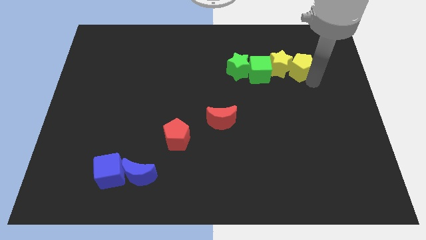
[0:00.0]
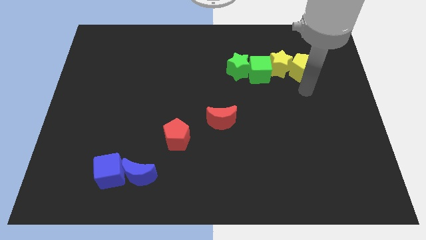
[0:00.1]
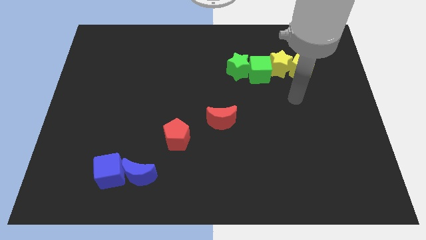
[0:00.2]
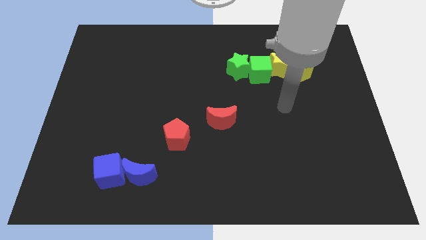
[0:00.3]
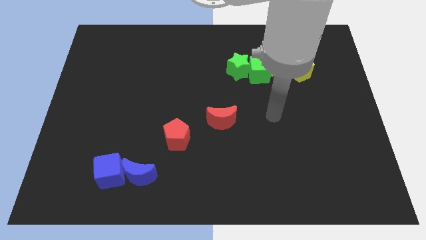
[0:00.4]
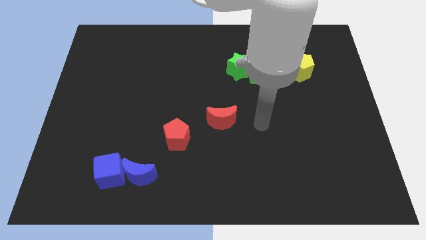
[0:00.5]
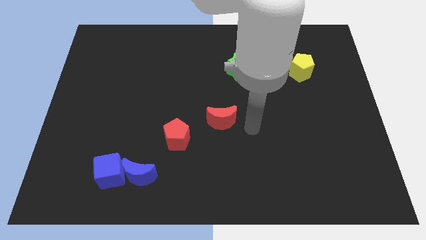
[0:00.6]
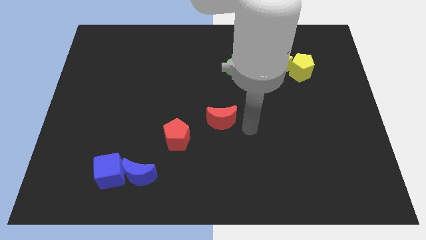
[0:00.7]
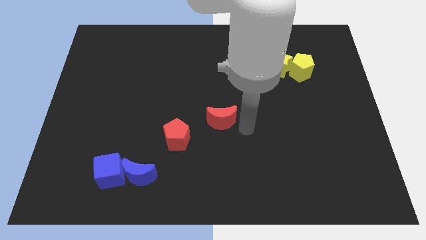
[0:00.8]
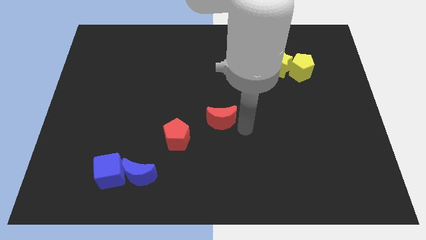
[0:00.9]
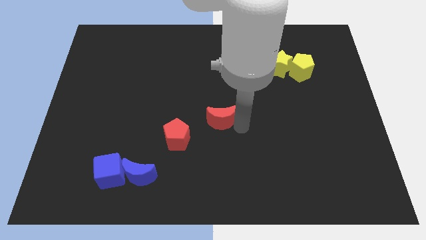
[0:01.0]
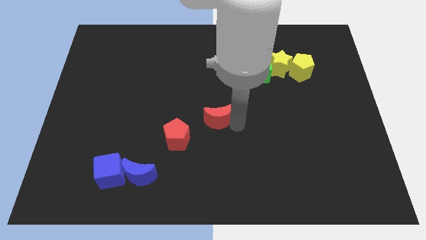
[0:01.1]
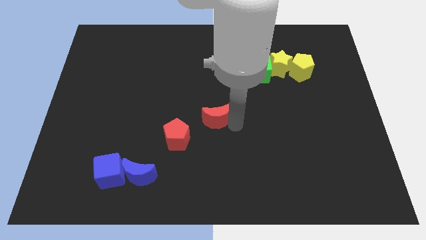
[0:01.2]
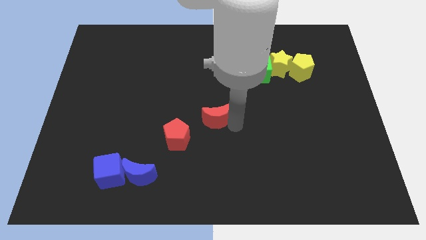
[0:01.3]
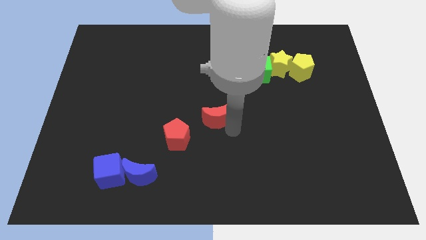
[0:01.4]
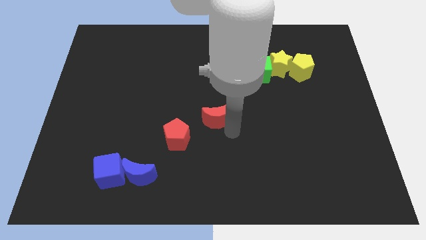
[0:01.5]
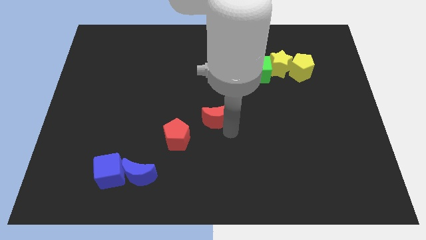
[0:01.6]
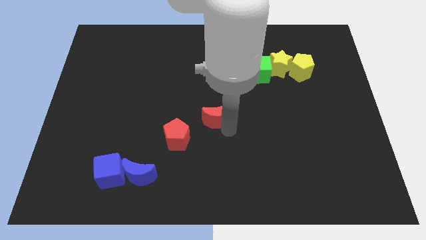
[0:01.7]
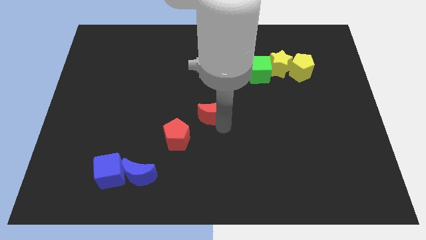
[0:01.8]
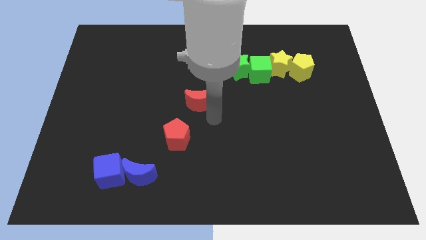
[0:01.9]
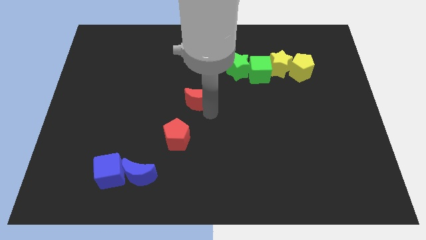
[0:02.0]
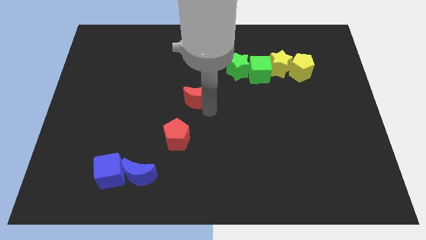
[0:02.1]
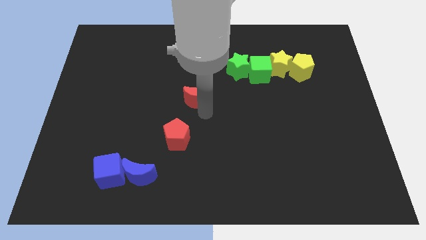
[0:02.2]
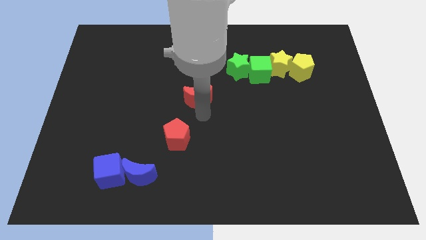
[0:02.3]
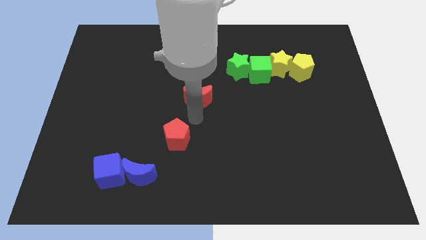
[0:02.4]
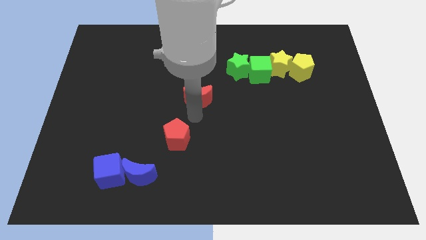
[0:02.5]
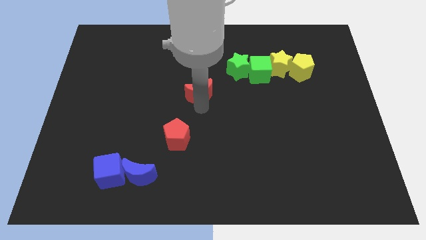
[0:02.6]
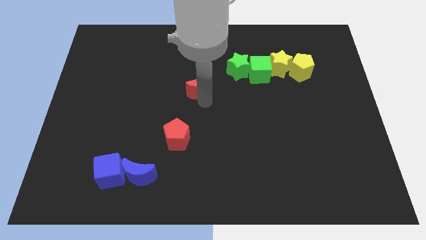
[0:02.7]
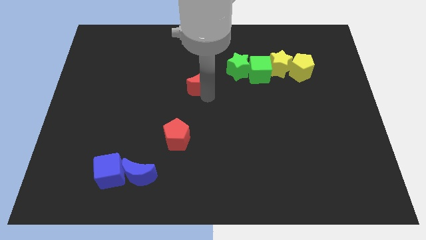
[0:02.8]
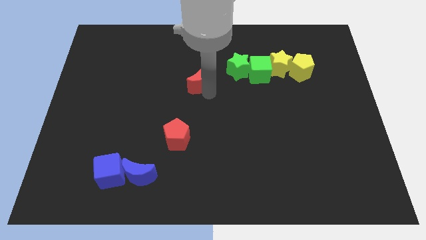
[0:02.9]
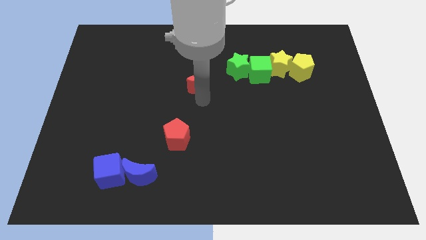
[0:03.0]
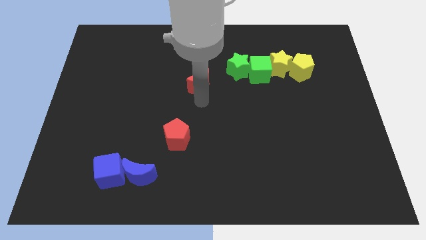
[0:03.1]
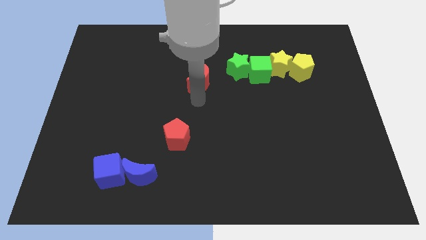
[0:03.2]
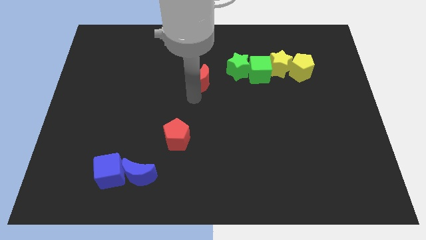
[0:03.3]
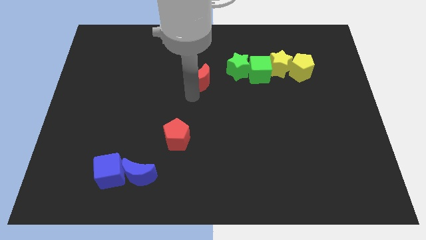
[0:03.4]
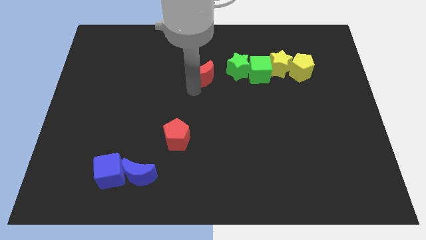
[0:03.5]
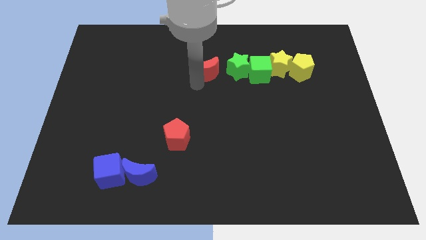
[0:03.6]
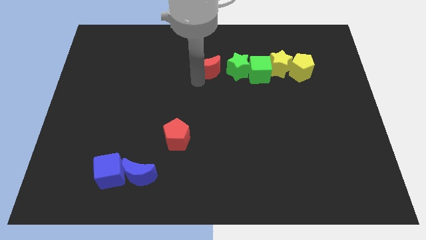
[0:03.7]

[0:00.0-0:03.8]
move the red moon to the left side of the green star

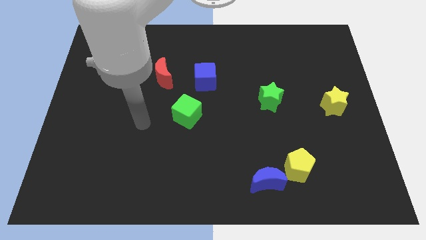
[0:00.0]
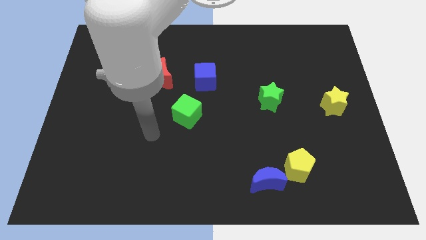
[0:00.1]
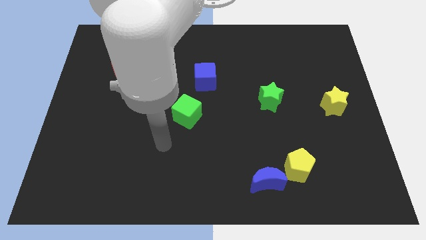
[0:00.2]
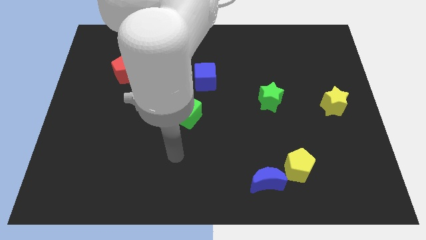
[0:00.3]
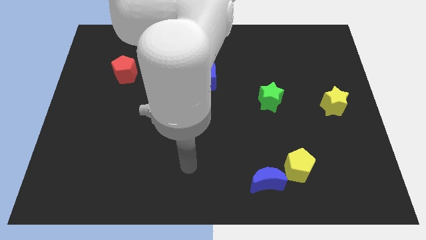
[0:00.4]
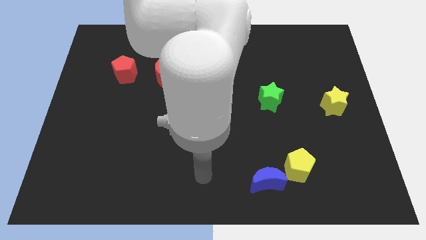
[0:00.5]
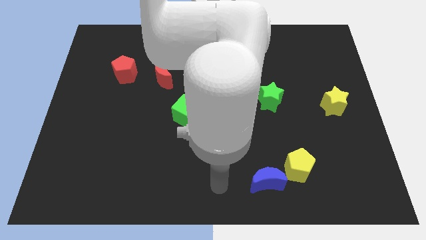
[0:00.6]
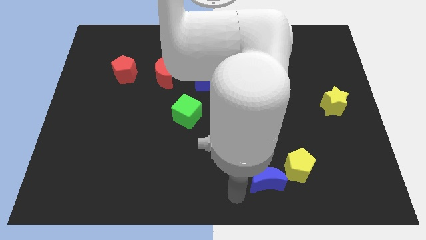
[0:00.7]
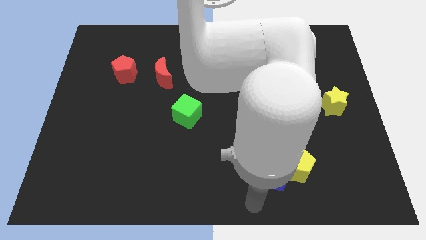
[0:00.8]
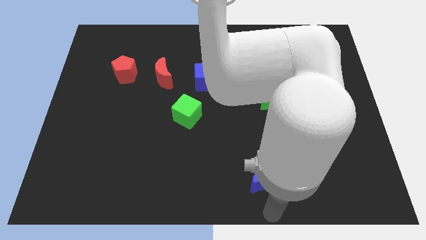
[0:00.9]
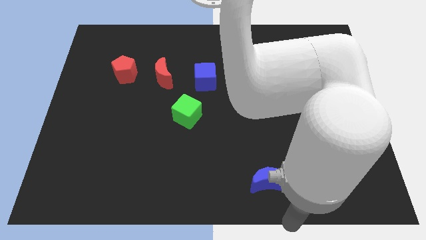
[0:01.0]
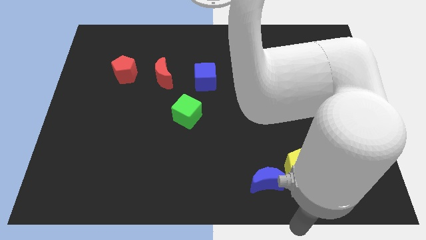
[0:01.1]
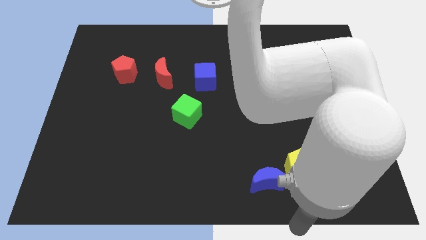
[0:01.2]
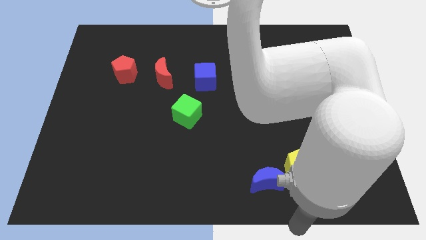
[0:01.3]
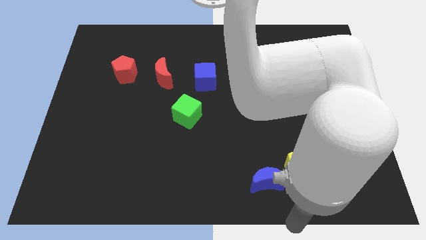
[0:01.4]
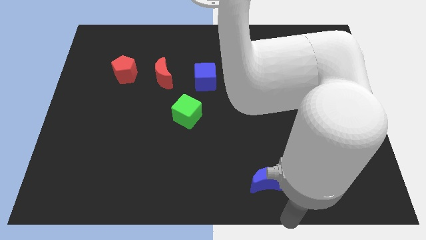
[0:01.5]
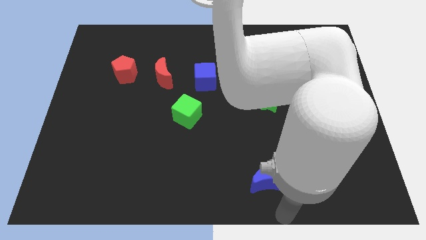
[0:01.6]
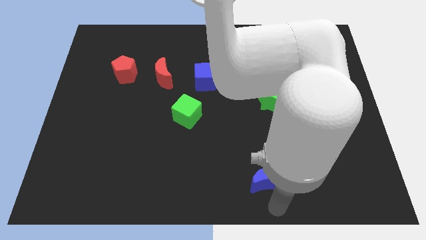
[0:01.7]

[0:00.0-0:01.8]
move the arm towards the blue crescent

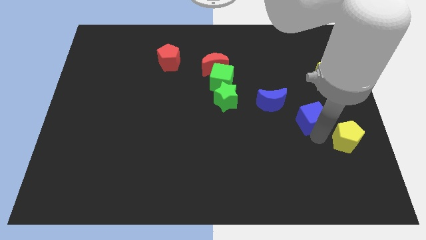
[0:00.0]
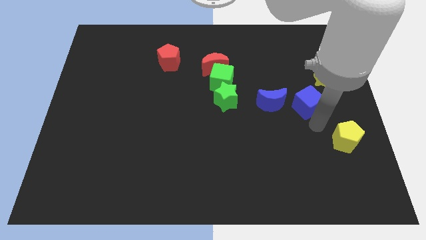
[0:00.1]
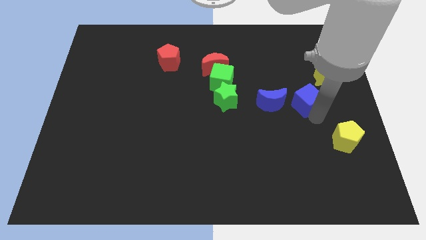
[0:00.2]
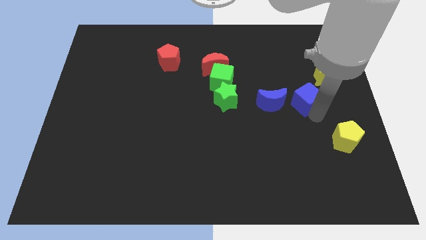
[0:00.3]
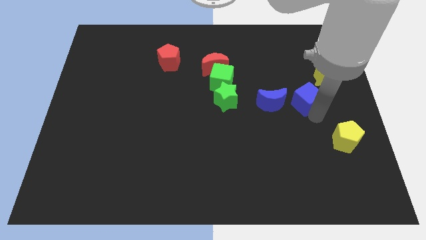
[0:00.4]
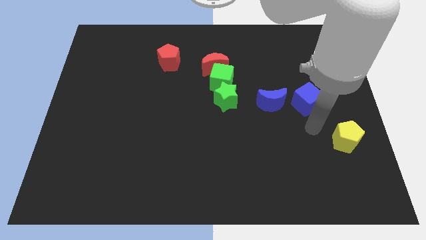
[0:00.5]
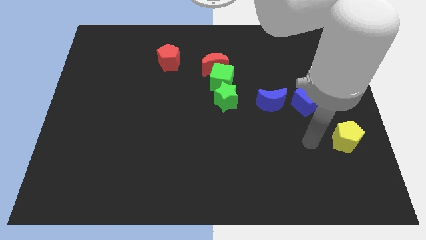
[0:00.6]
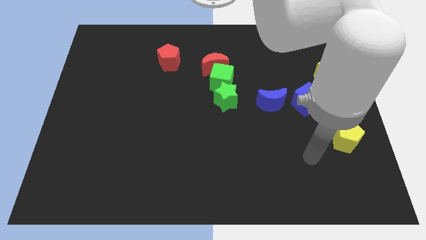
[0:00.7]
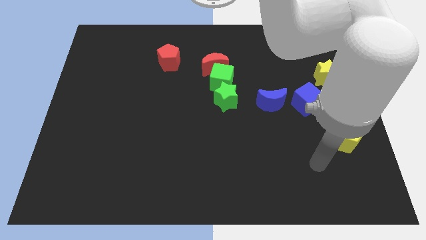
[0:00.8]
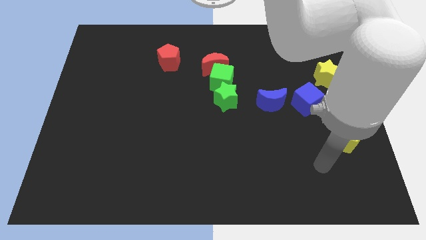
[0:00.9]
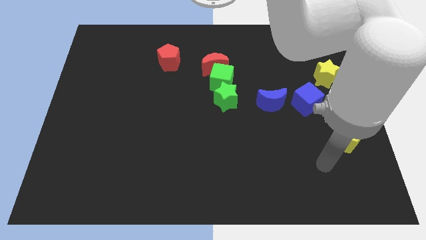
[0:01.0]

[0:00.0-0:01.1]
place the blue cube right of the blue moon

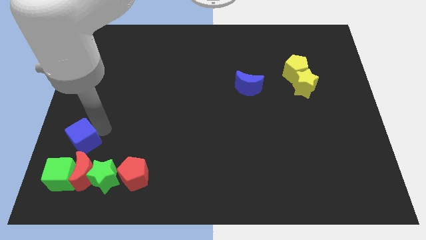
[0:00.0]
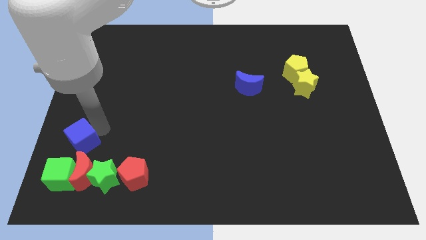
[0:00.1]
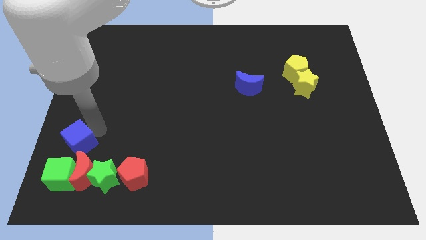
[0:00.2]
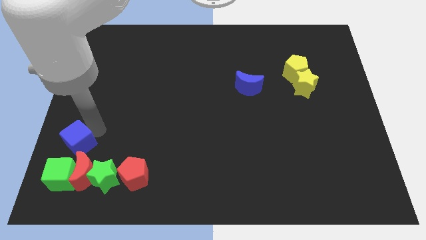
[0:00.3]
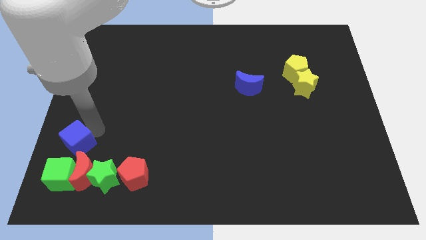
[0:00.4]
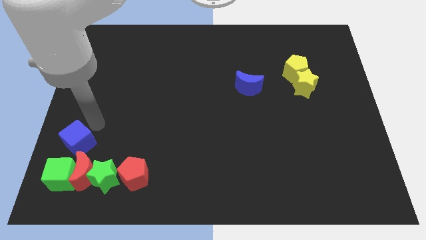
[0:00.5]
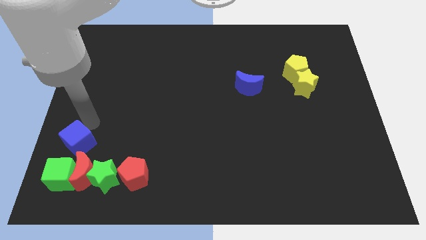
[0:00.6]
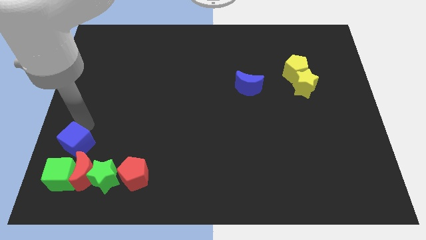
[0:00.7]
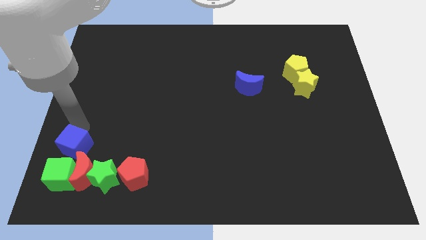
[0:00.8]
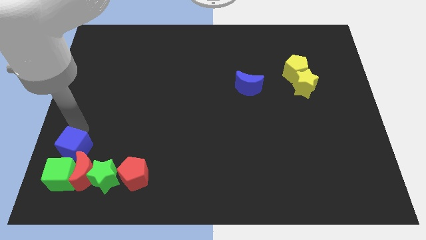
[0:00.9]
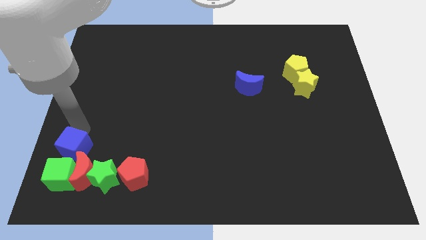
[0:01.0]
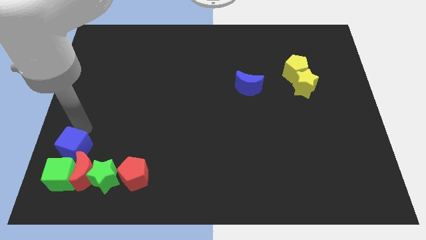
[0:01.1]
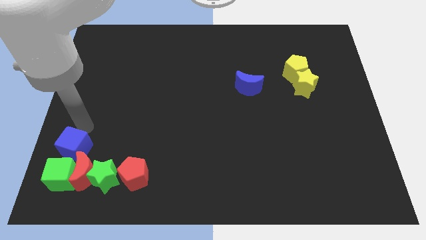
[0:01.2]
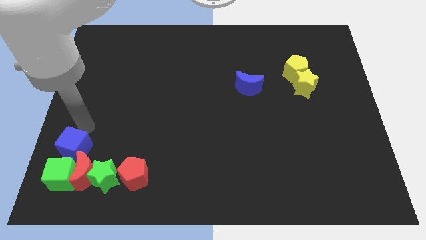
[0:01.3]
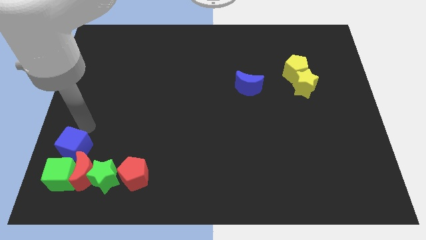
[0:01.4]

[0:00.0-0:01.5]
push the blue cube to the top of the green cube

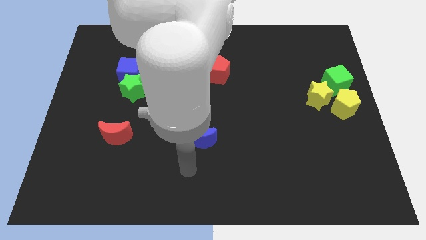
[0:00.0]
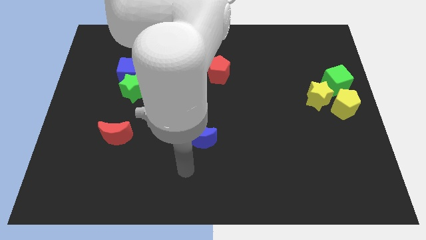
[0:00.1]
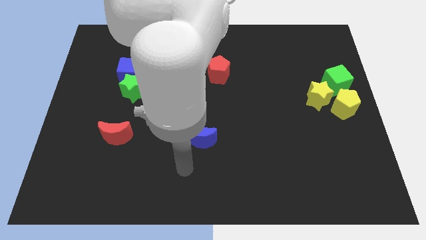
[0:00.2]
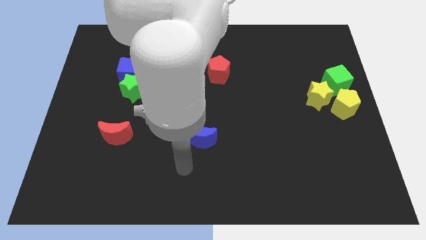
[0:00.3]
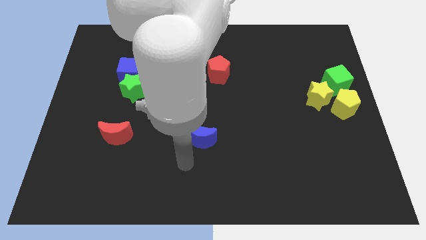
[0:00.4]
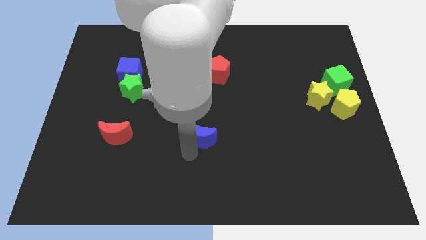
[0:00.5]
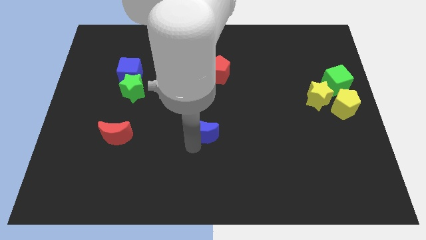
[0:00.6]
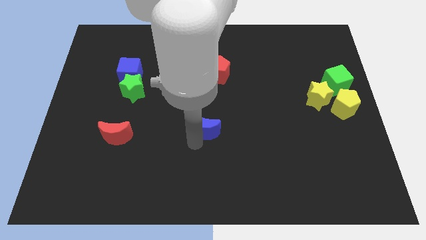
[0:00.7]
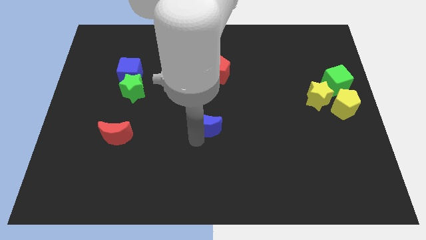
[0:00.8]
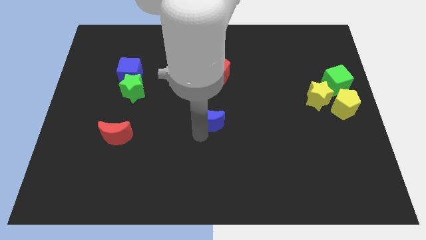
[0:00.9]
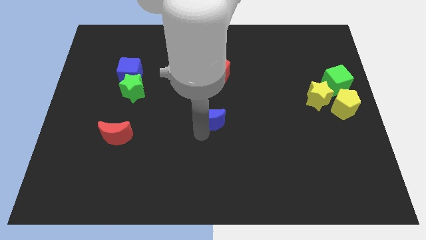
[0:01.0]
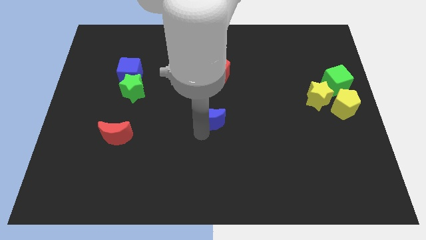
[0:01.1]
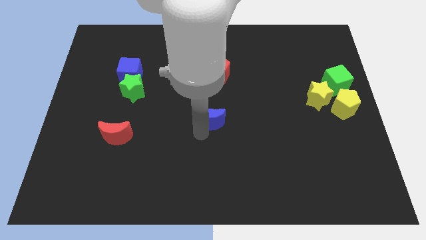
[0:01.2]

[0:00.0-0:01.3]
move the blue crescent towards the center of the board
